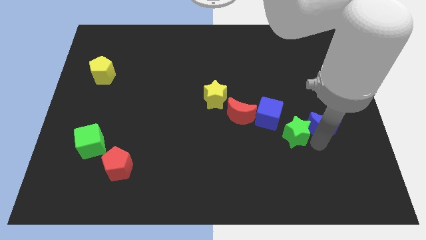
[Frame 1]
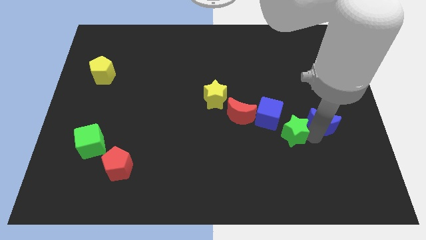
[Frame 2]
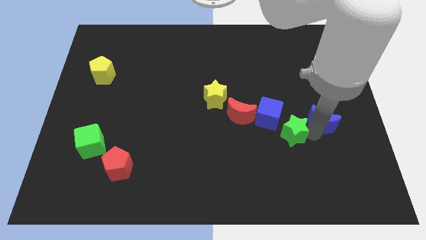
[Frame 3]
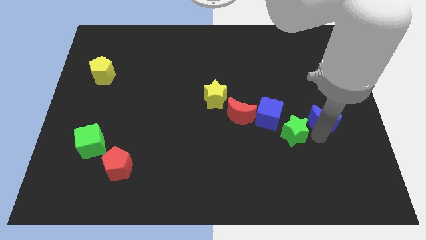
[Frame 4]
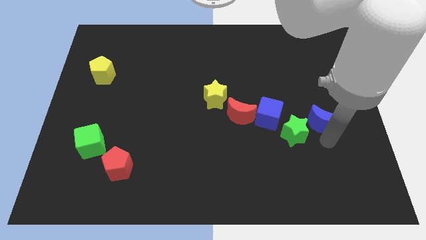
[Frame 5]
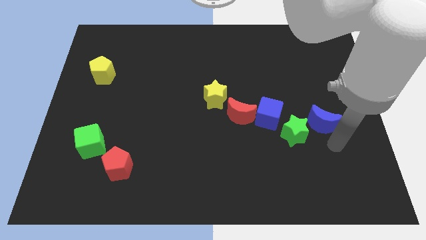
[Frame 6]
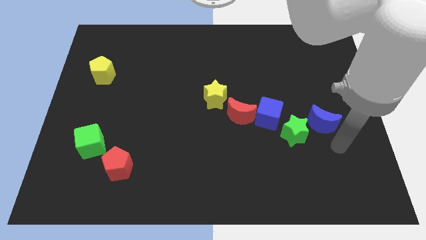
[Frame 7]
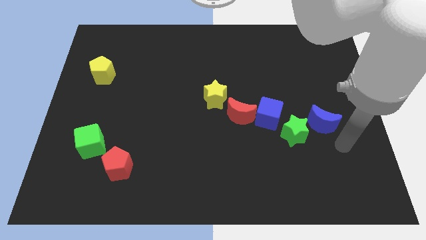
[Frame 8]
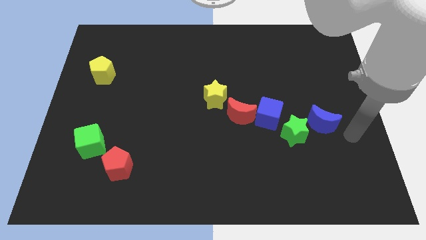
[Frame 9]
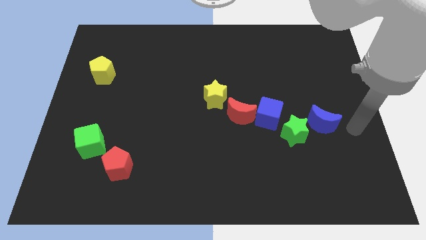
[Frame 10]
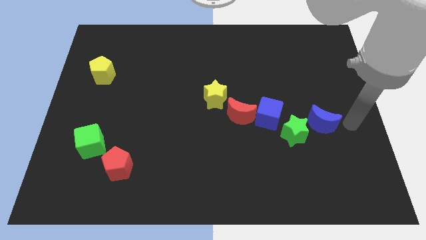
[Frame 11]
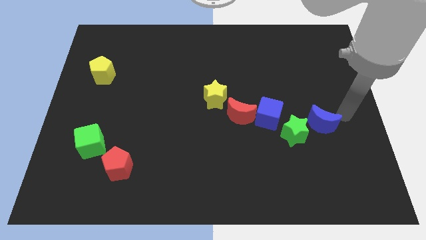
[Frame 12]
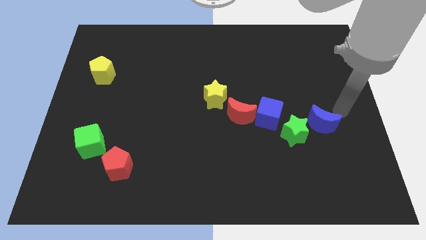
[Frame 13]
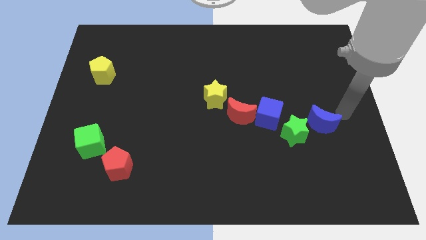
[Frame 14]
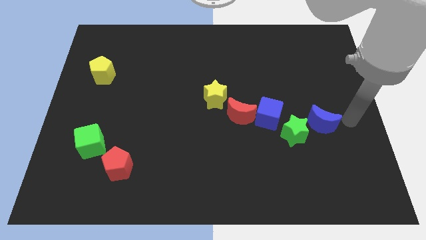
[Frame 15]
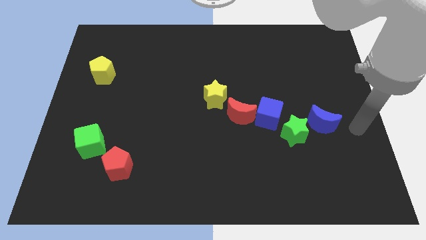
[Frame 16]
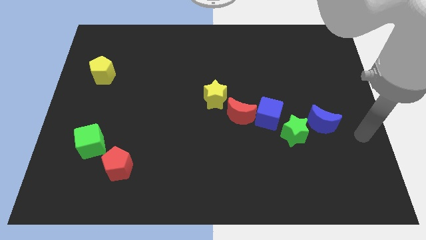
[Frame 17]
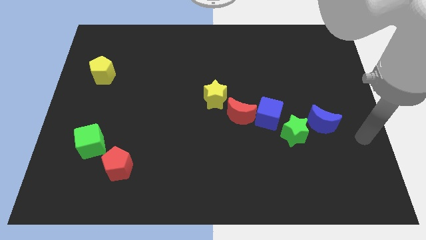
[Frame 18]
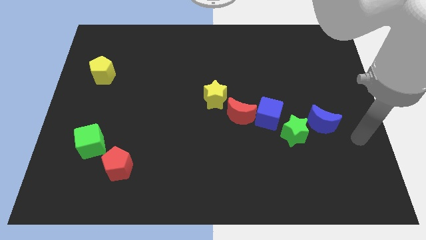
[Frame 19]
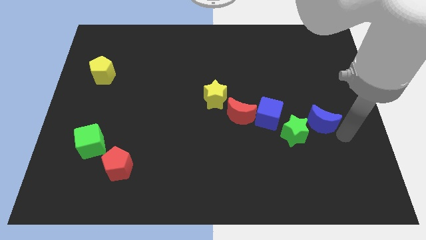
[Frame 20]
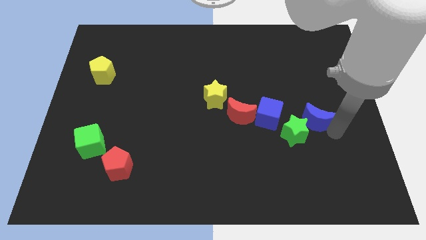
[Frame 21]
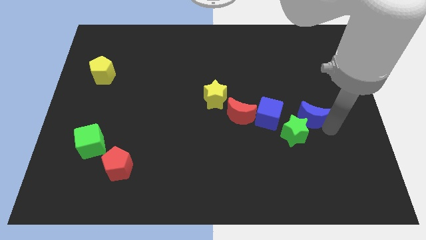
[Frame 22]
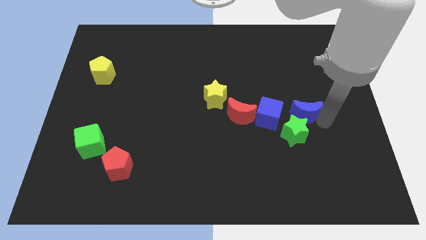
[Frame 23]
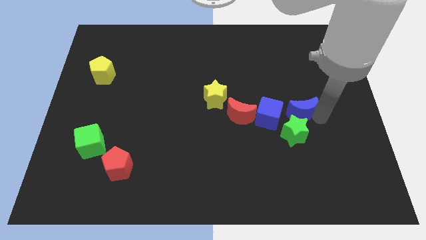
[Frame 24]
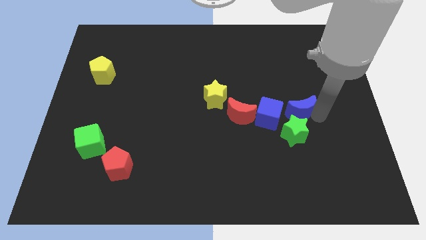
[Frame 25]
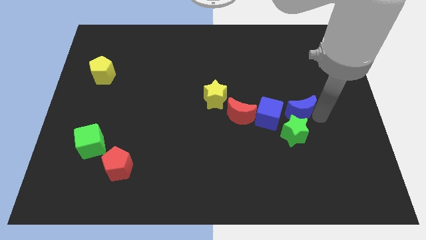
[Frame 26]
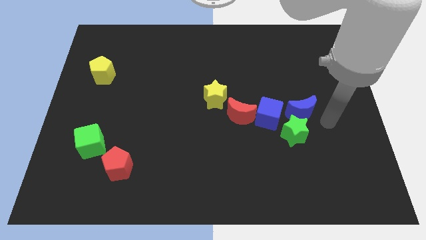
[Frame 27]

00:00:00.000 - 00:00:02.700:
move the blue crescent above the green star

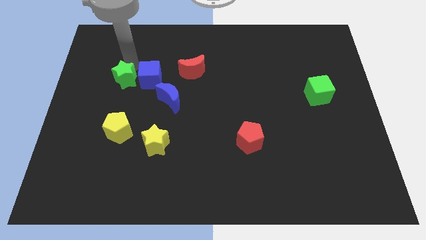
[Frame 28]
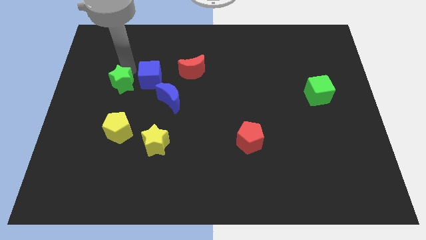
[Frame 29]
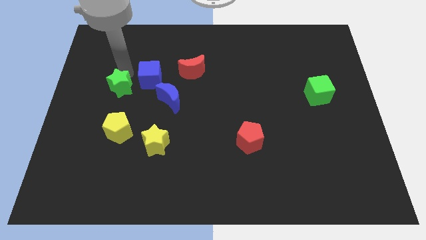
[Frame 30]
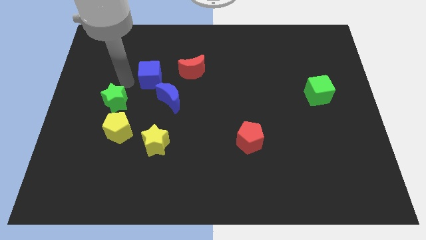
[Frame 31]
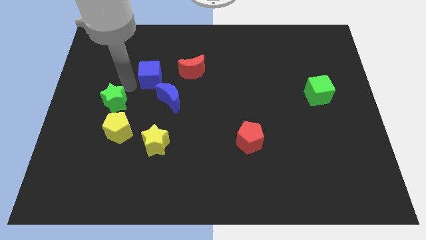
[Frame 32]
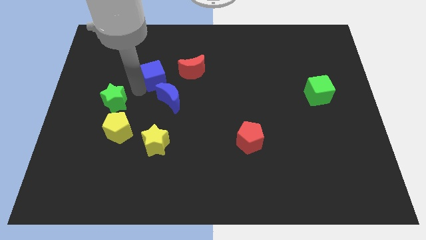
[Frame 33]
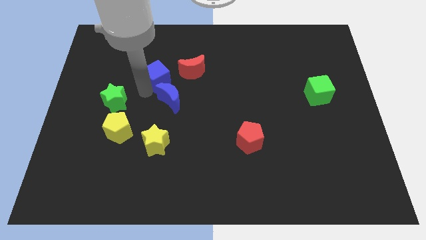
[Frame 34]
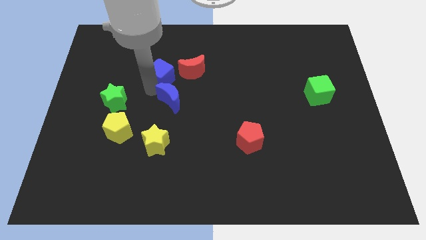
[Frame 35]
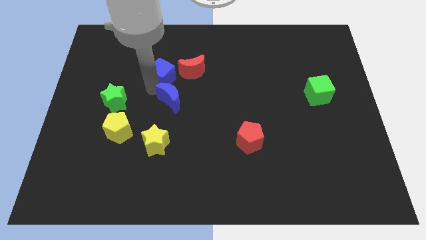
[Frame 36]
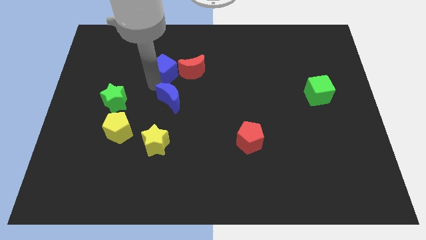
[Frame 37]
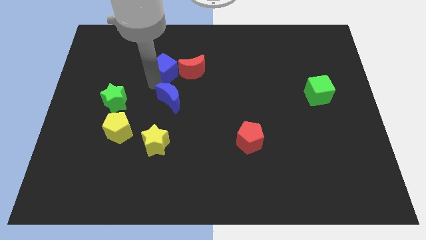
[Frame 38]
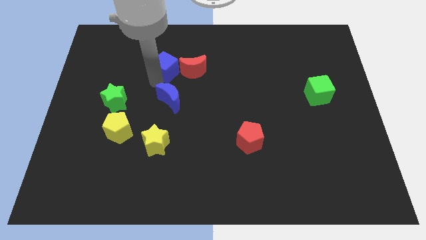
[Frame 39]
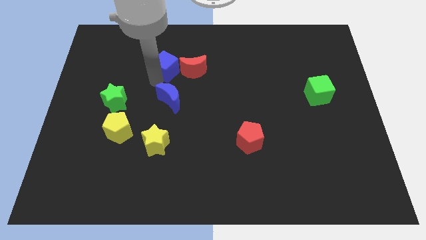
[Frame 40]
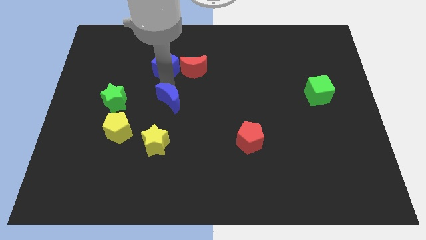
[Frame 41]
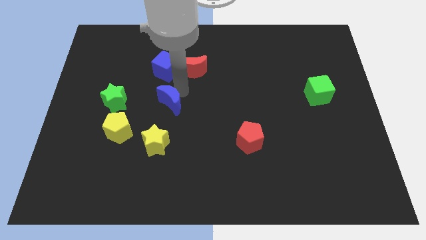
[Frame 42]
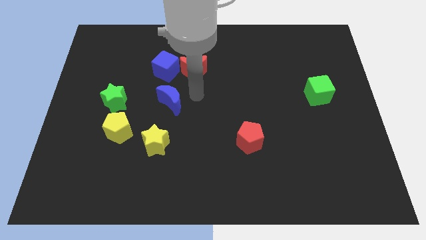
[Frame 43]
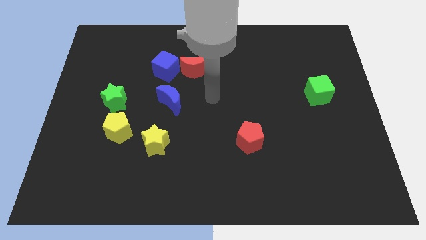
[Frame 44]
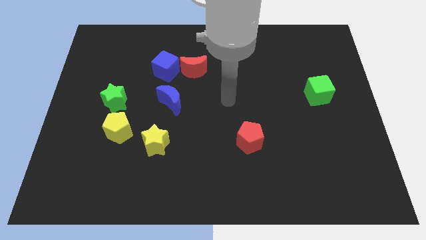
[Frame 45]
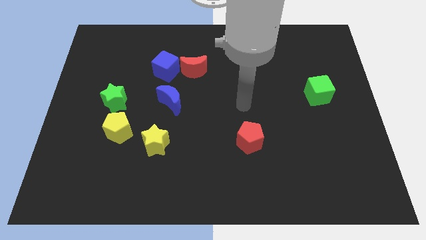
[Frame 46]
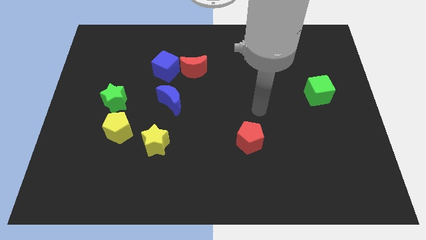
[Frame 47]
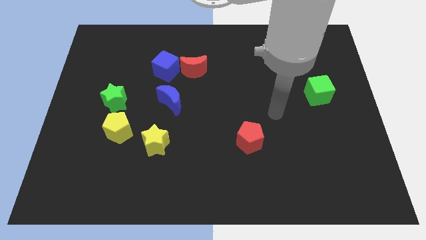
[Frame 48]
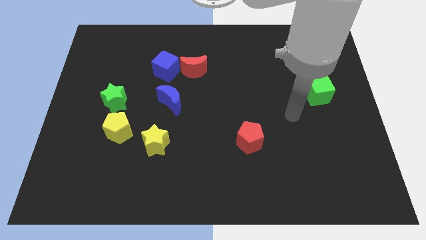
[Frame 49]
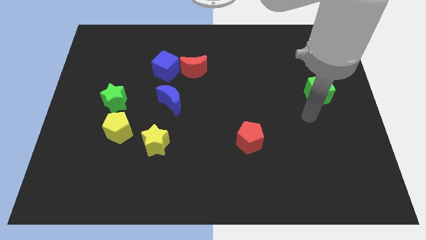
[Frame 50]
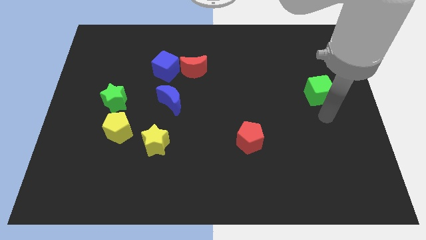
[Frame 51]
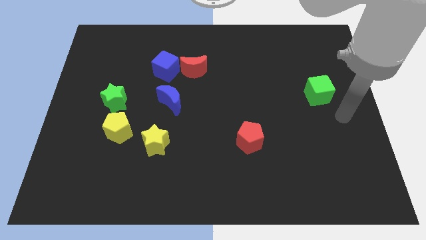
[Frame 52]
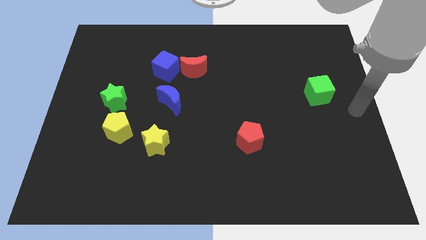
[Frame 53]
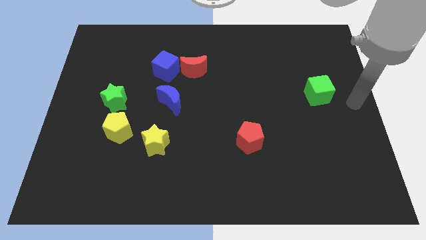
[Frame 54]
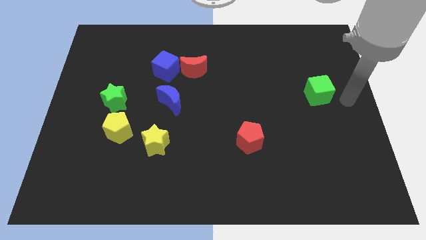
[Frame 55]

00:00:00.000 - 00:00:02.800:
separate the blue cube from the blue moon

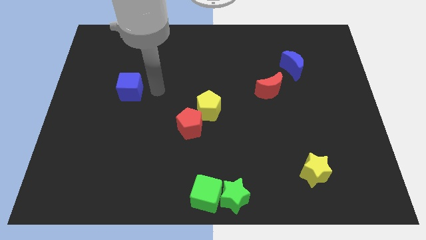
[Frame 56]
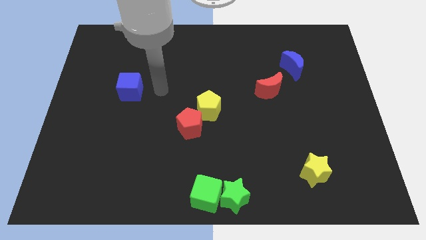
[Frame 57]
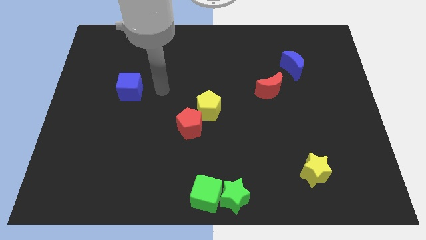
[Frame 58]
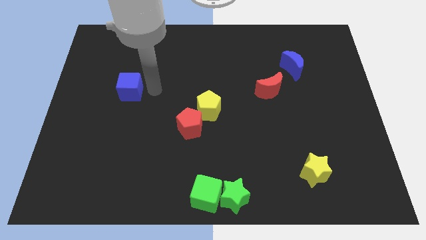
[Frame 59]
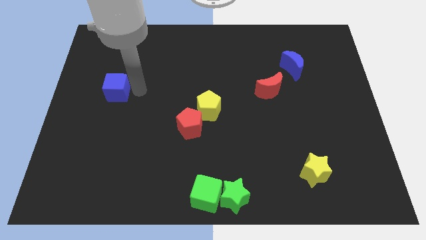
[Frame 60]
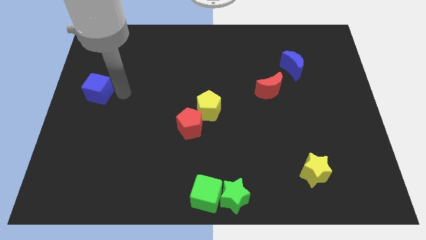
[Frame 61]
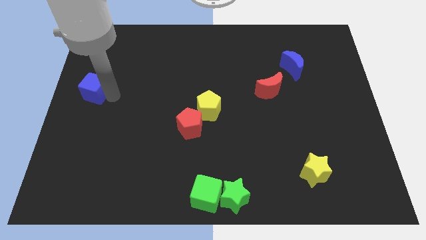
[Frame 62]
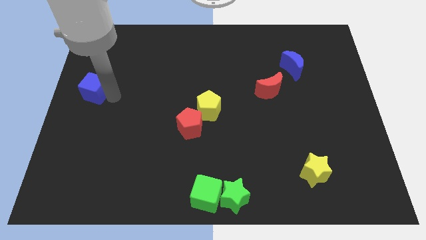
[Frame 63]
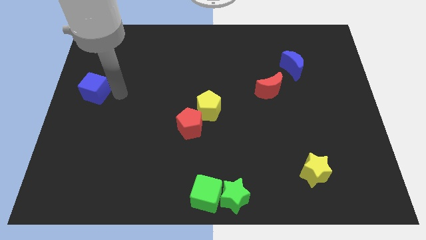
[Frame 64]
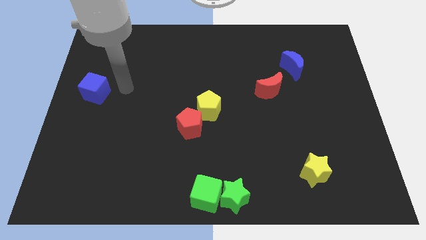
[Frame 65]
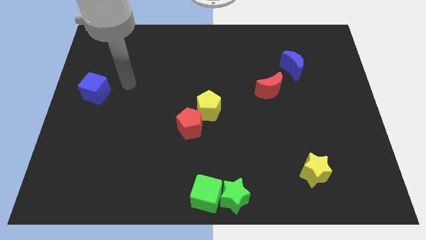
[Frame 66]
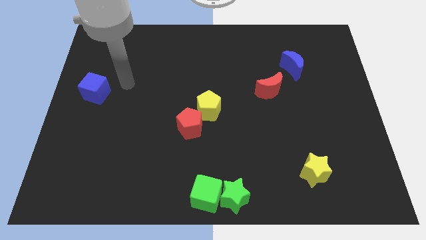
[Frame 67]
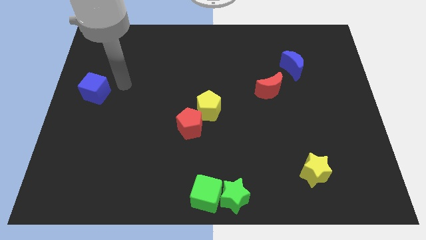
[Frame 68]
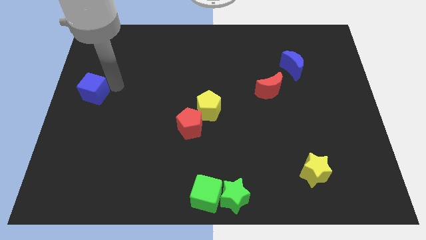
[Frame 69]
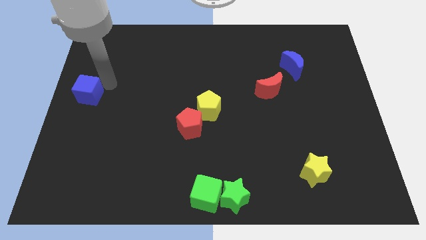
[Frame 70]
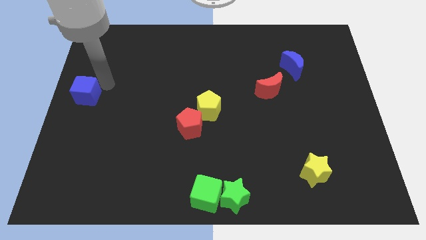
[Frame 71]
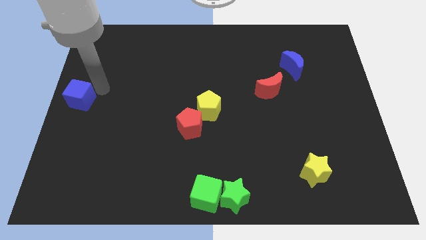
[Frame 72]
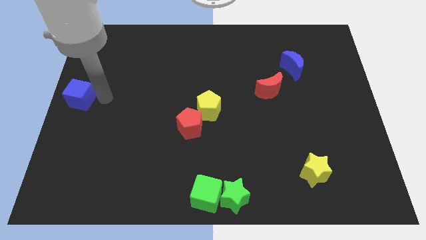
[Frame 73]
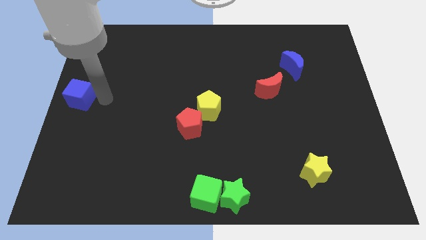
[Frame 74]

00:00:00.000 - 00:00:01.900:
push the blue cube to the center left of the board

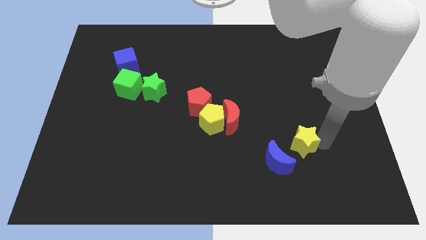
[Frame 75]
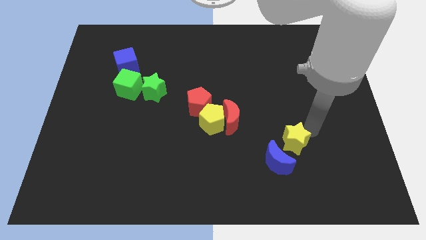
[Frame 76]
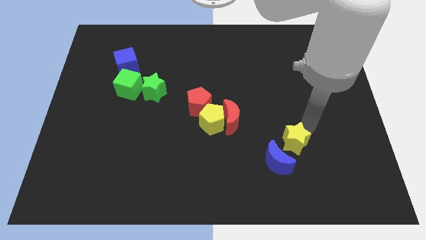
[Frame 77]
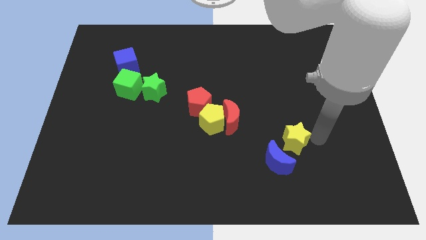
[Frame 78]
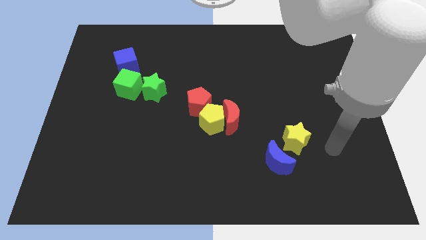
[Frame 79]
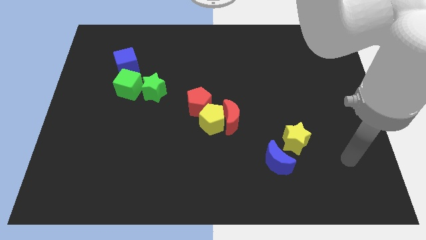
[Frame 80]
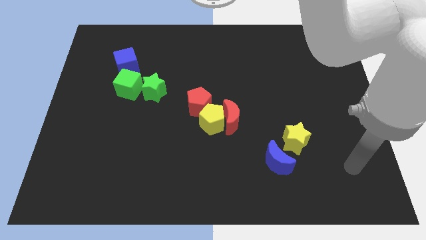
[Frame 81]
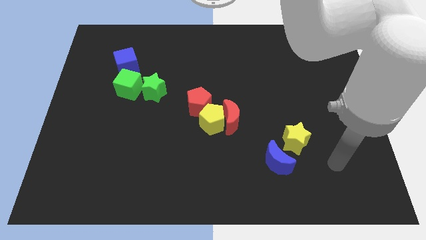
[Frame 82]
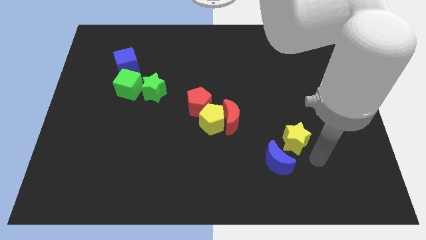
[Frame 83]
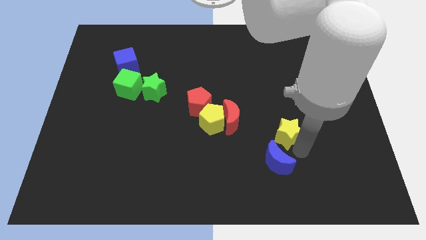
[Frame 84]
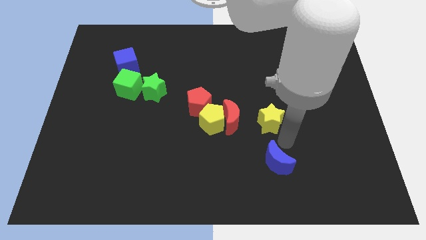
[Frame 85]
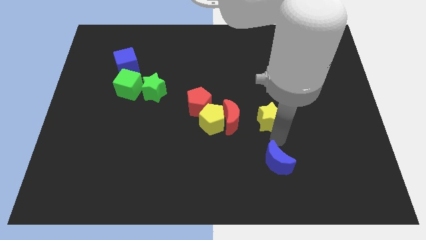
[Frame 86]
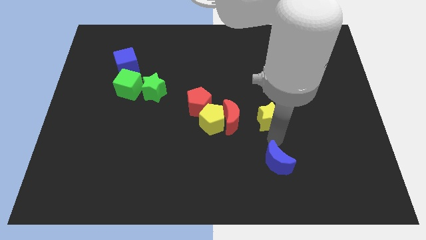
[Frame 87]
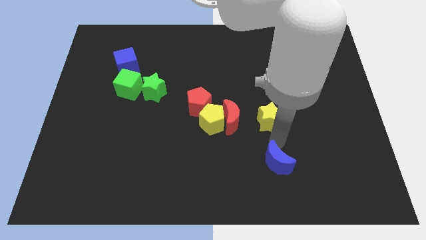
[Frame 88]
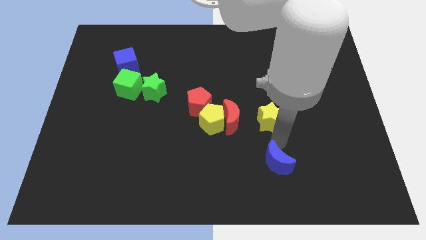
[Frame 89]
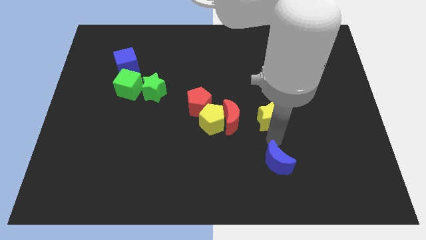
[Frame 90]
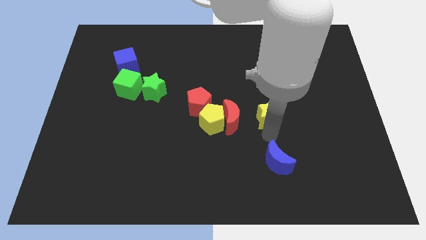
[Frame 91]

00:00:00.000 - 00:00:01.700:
put the yellow star right to the red moon
